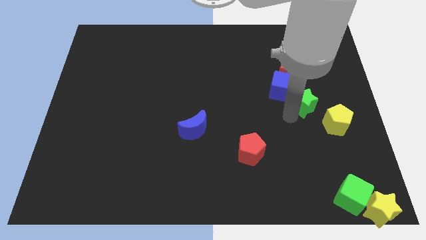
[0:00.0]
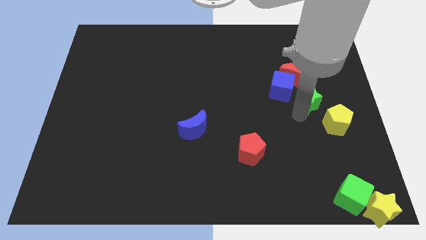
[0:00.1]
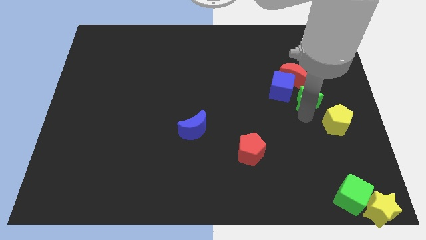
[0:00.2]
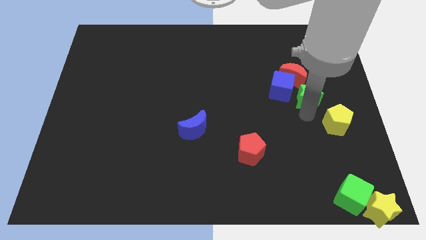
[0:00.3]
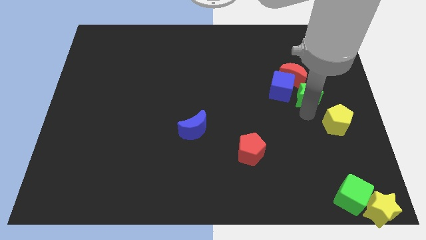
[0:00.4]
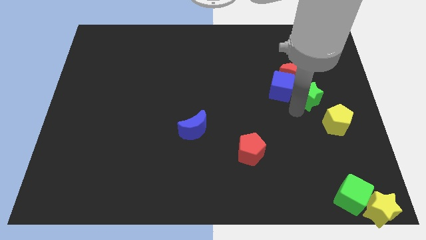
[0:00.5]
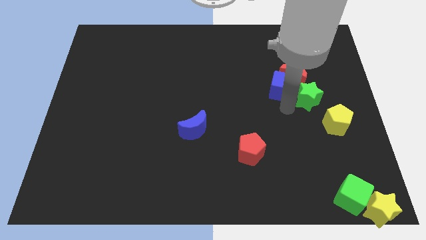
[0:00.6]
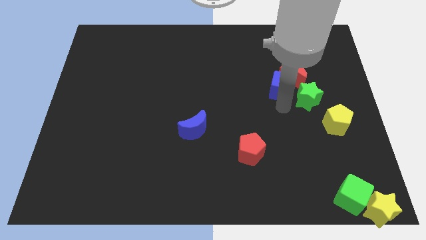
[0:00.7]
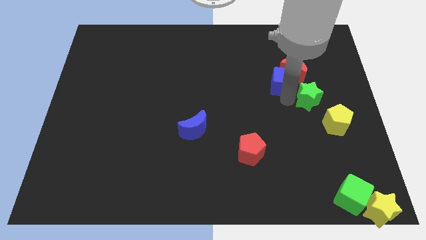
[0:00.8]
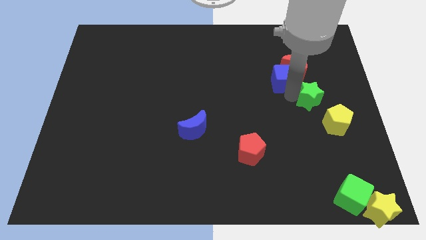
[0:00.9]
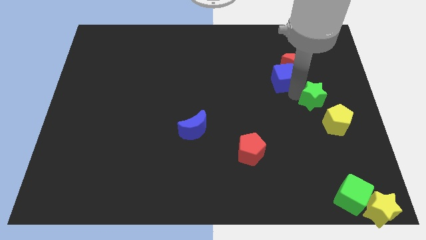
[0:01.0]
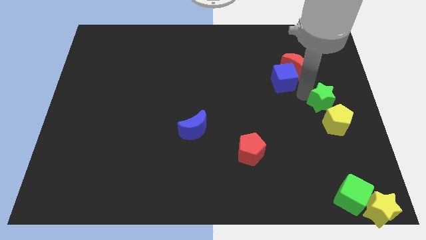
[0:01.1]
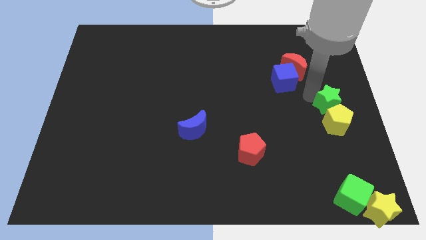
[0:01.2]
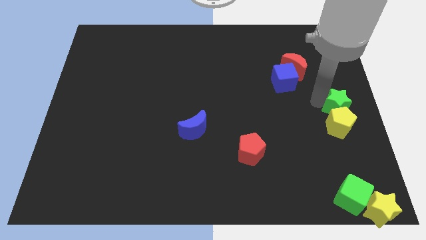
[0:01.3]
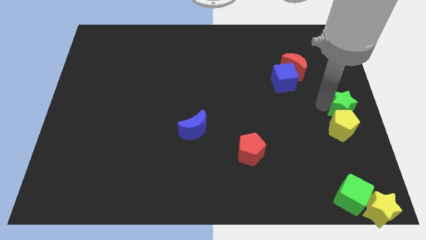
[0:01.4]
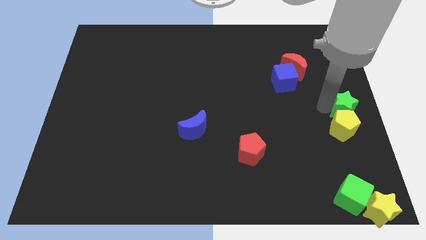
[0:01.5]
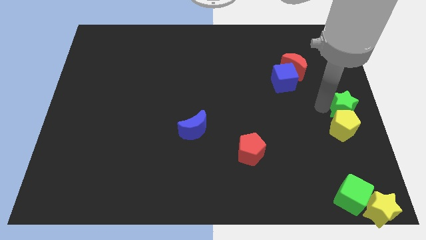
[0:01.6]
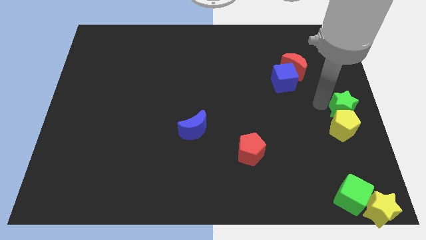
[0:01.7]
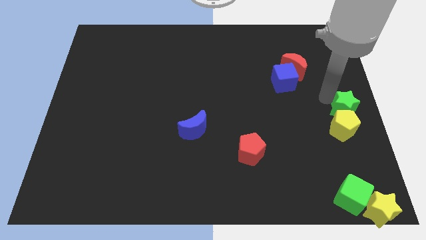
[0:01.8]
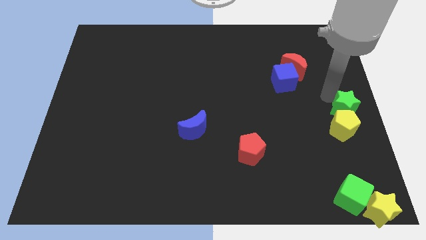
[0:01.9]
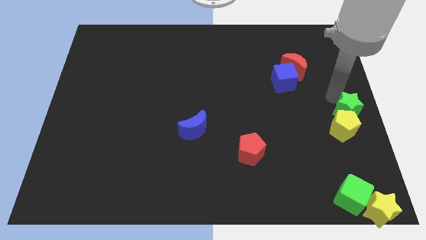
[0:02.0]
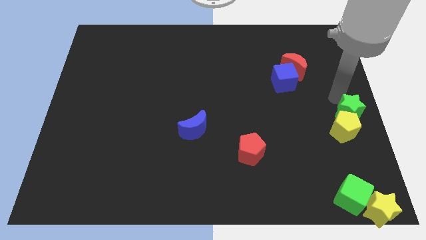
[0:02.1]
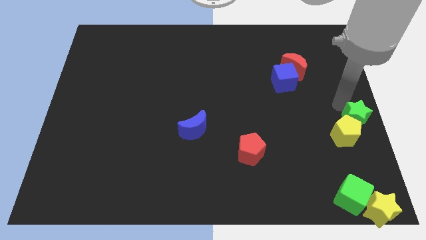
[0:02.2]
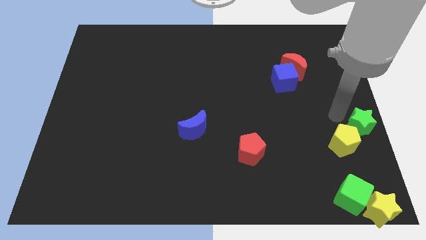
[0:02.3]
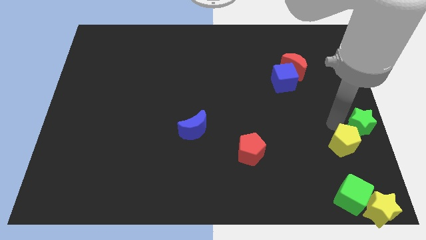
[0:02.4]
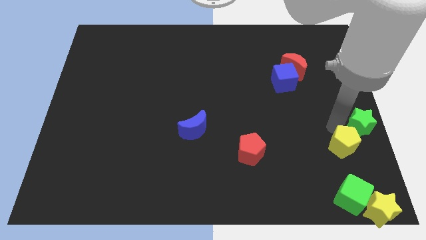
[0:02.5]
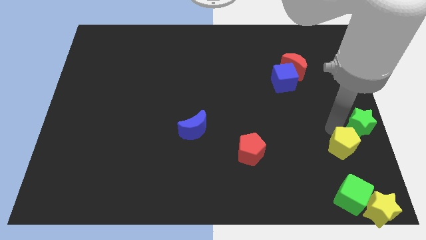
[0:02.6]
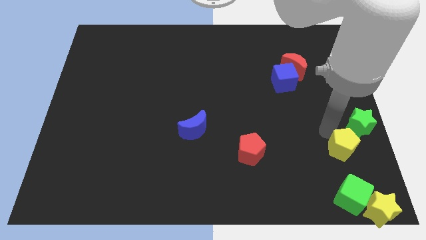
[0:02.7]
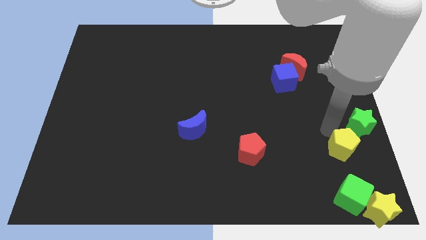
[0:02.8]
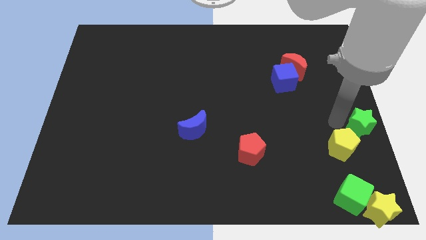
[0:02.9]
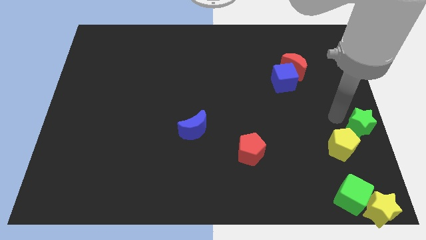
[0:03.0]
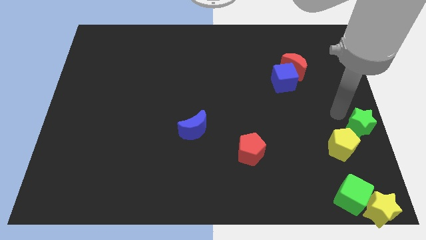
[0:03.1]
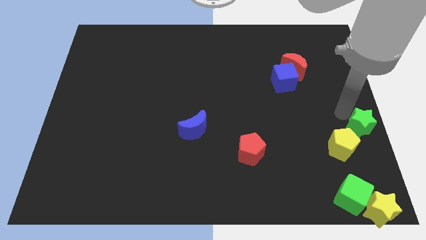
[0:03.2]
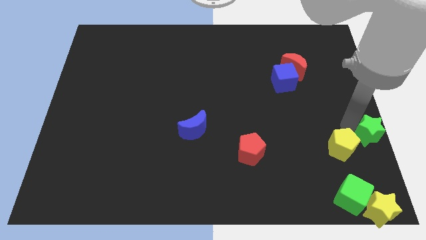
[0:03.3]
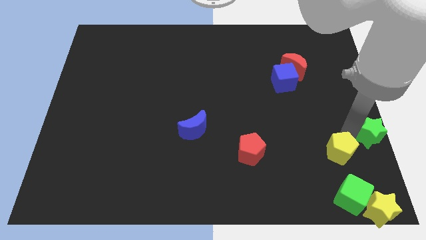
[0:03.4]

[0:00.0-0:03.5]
move the yellow pentagon and green star towards the bottom right

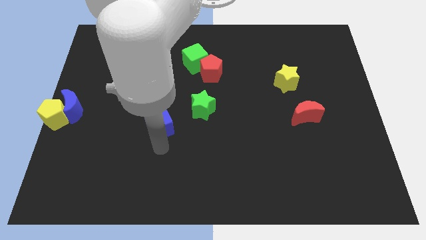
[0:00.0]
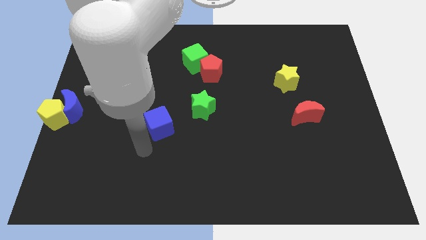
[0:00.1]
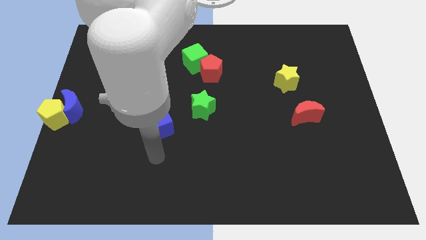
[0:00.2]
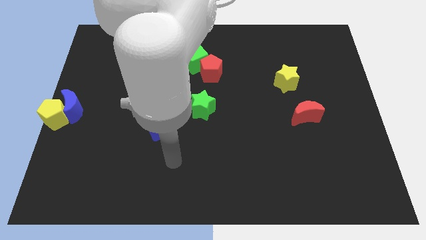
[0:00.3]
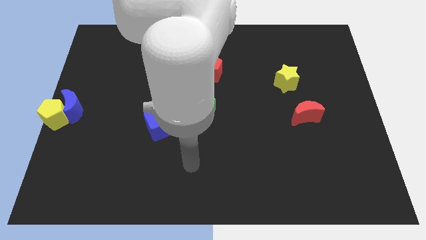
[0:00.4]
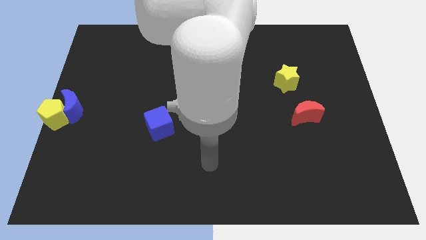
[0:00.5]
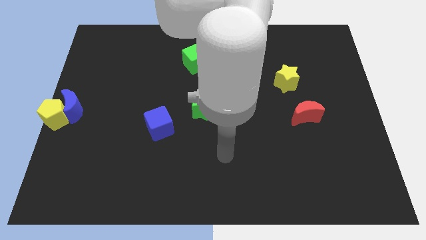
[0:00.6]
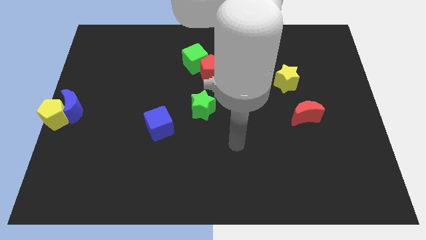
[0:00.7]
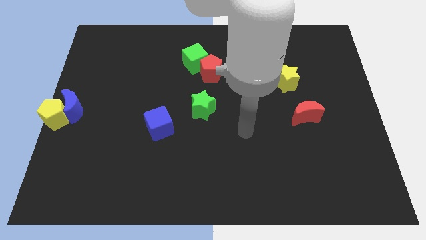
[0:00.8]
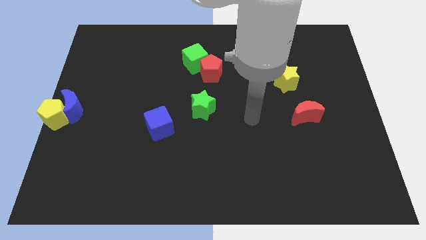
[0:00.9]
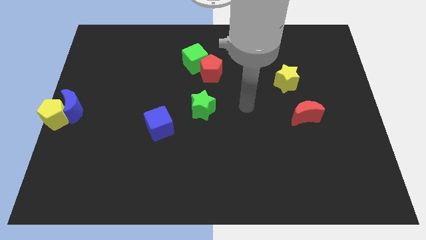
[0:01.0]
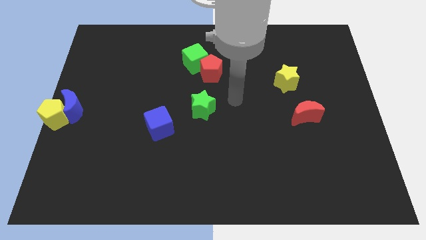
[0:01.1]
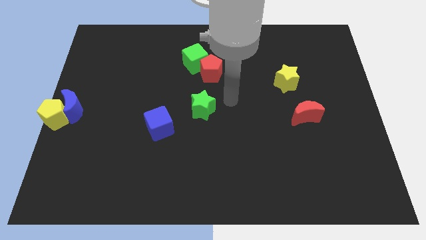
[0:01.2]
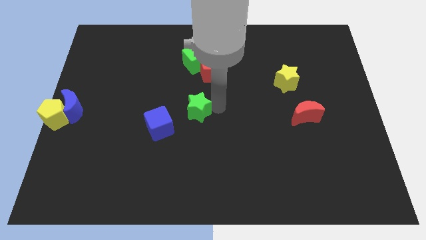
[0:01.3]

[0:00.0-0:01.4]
place the arm at the right side of the green star

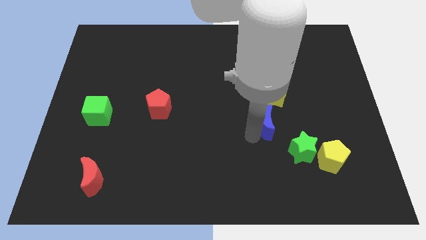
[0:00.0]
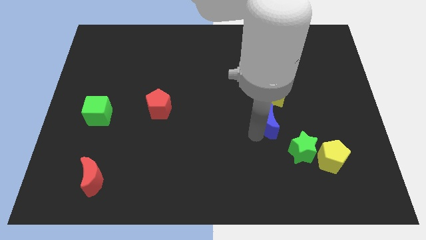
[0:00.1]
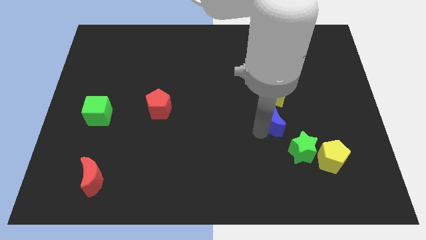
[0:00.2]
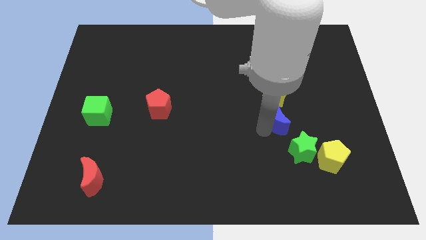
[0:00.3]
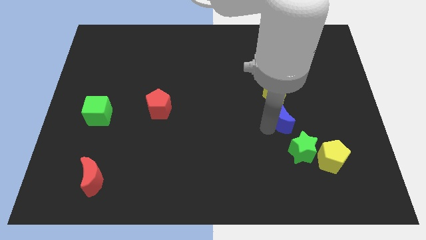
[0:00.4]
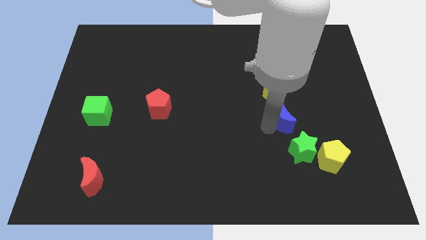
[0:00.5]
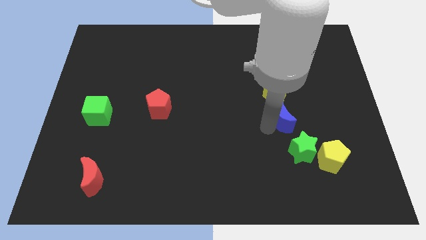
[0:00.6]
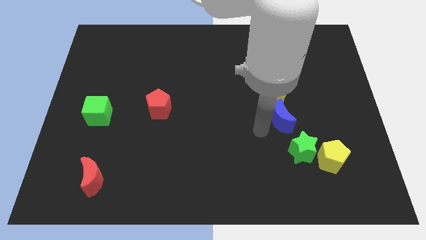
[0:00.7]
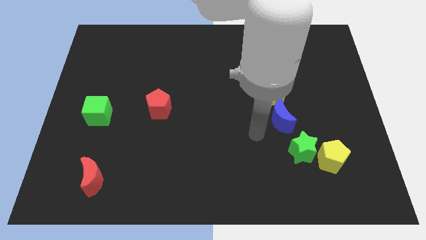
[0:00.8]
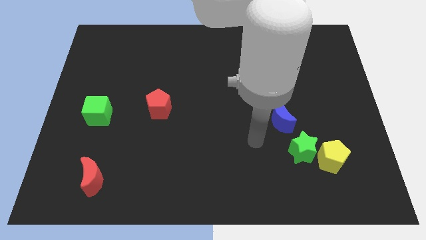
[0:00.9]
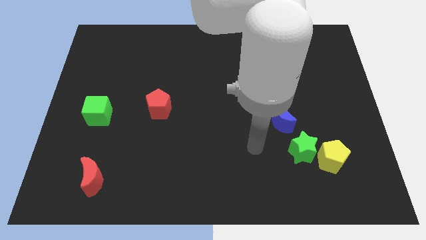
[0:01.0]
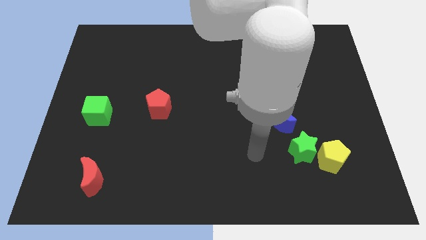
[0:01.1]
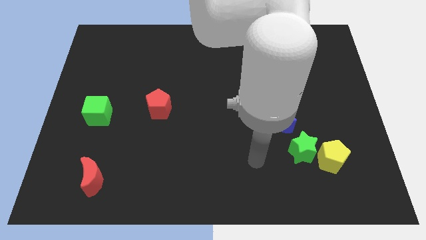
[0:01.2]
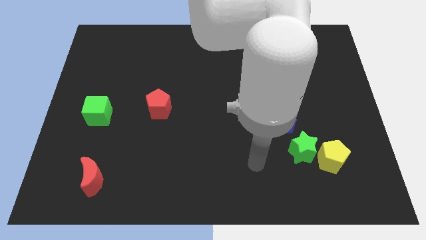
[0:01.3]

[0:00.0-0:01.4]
place the blue cube in between the green star and yellow star

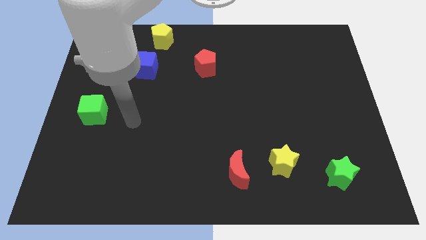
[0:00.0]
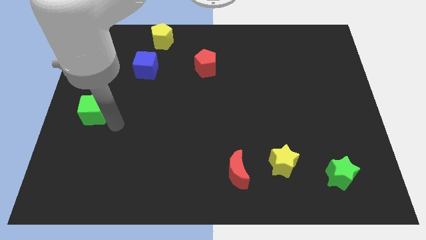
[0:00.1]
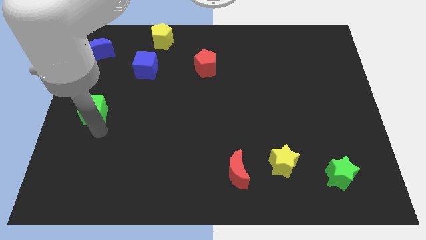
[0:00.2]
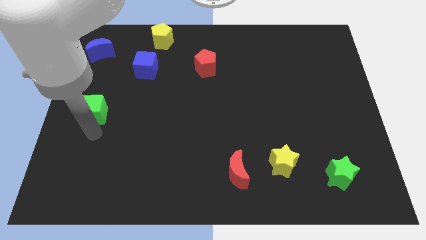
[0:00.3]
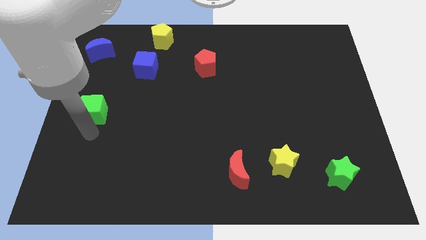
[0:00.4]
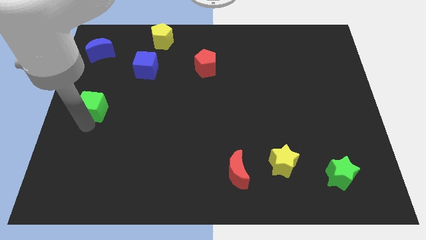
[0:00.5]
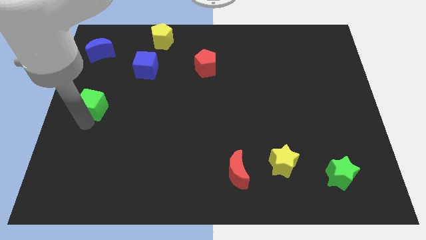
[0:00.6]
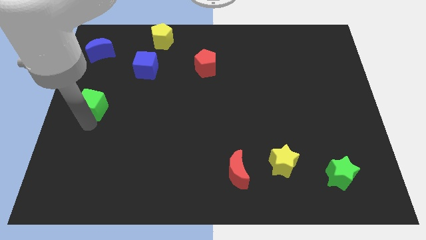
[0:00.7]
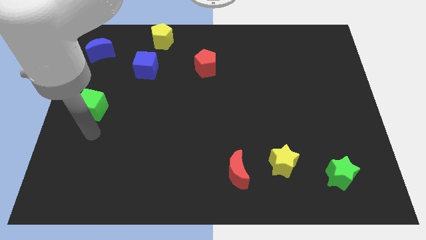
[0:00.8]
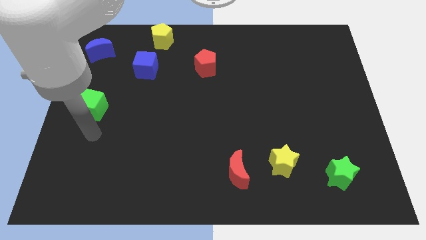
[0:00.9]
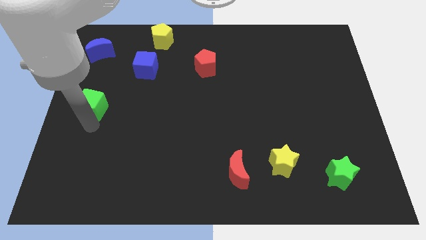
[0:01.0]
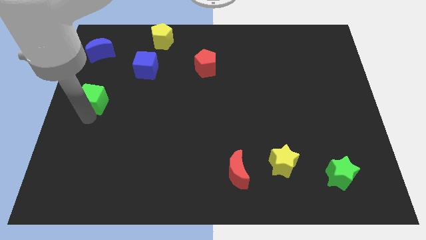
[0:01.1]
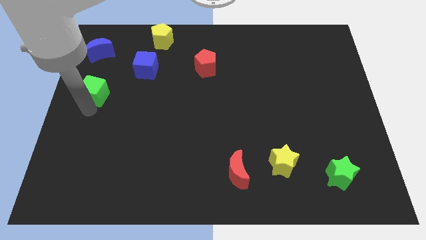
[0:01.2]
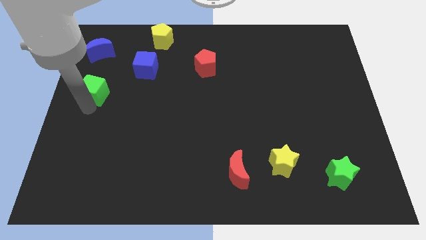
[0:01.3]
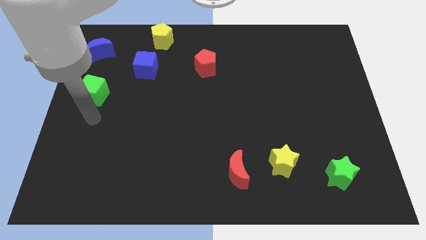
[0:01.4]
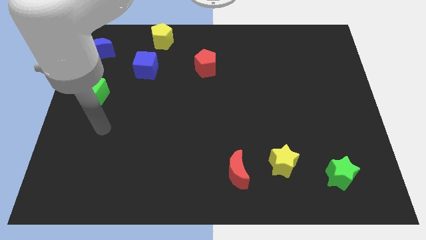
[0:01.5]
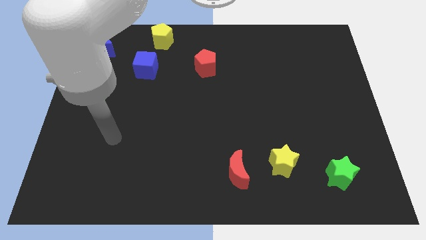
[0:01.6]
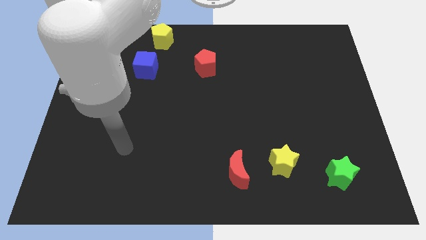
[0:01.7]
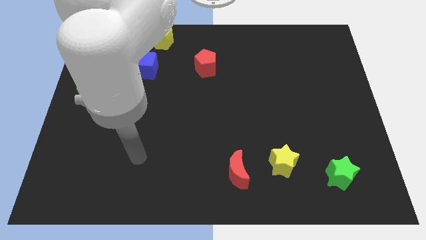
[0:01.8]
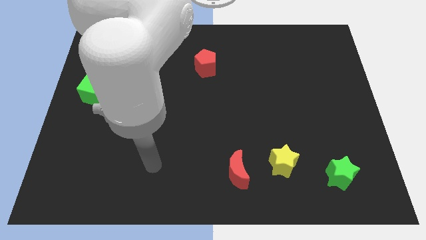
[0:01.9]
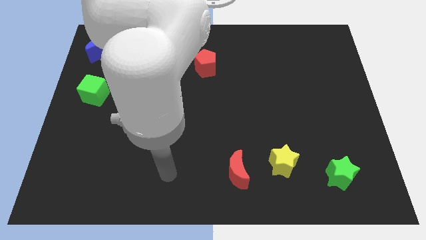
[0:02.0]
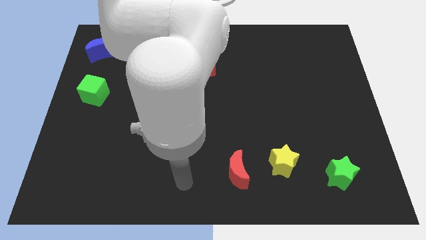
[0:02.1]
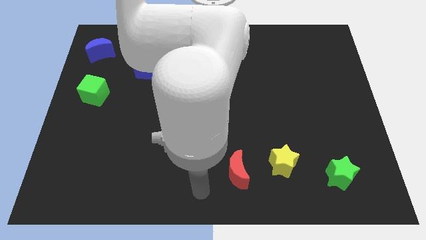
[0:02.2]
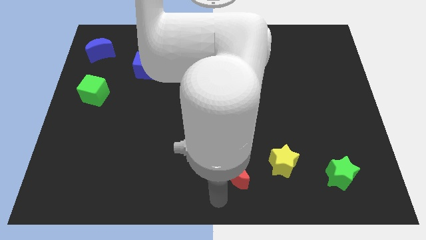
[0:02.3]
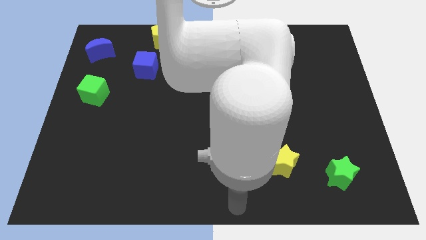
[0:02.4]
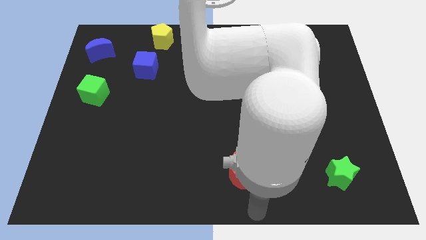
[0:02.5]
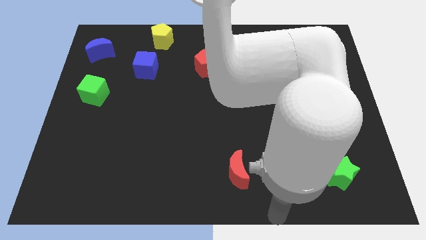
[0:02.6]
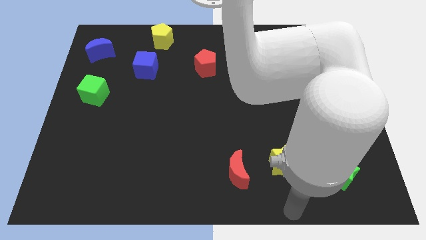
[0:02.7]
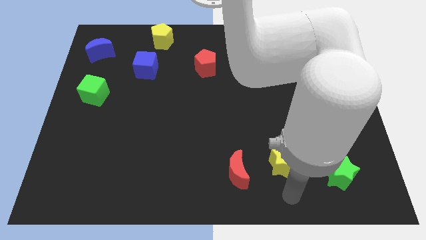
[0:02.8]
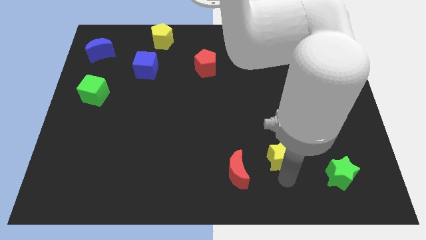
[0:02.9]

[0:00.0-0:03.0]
slightly push the green cube upwards of the board
